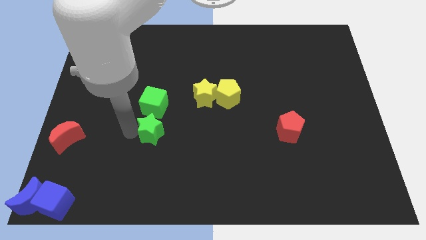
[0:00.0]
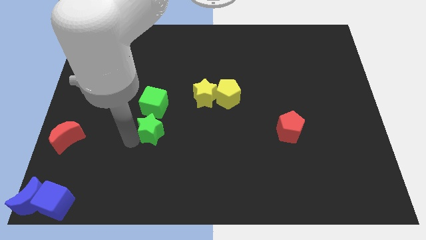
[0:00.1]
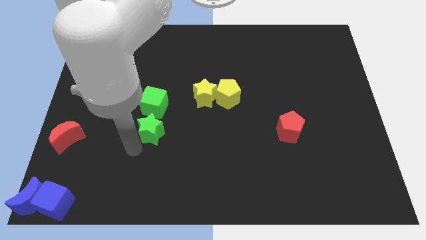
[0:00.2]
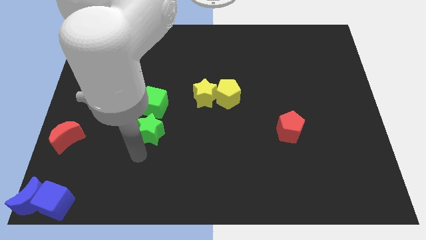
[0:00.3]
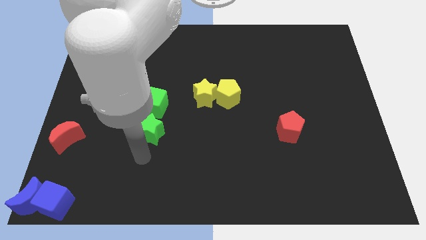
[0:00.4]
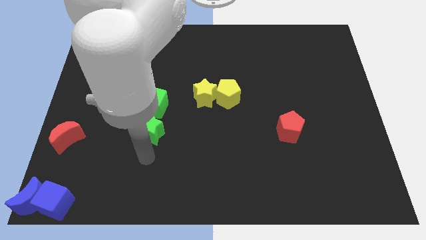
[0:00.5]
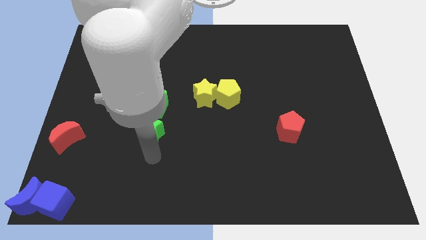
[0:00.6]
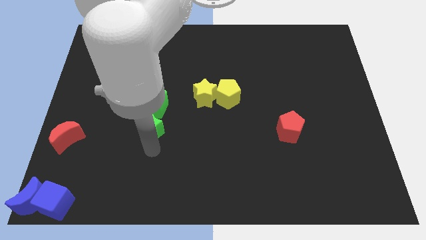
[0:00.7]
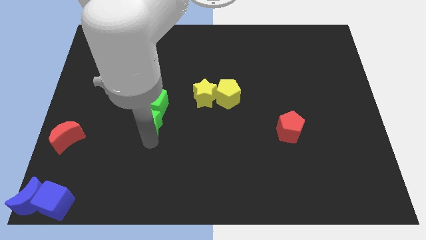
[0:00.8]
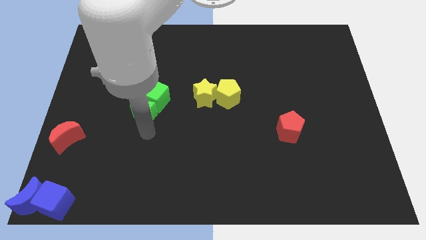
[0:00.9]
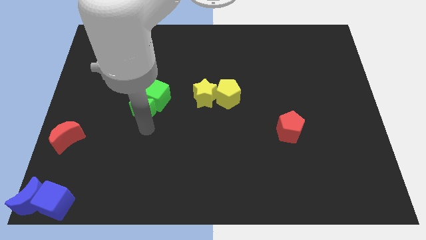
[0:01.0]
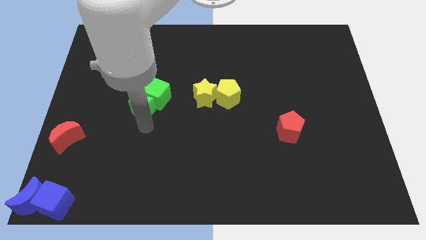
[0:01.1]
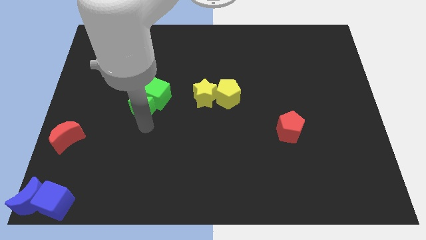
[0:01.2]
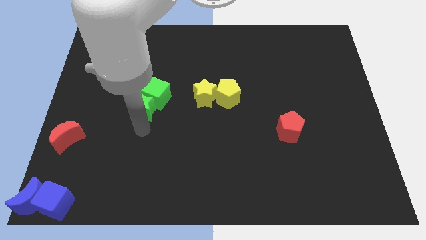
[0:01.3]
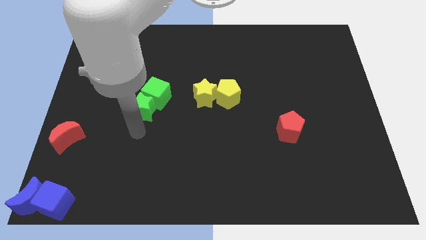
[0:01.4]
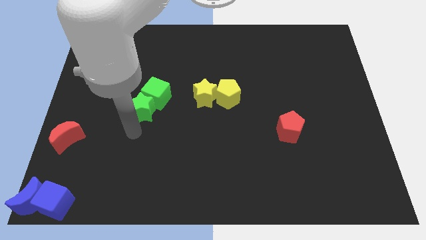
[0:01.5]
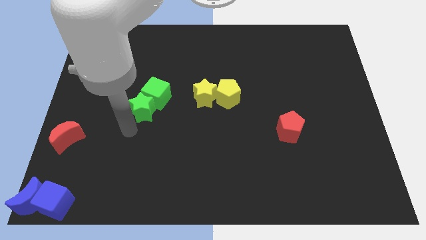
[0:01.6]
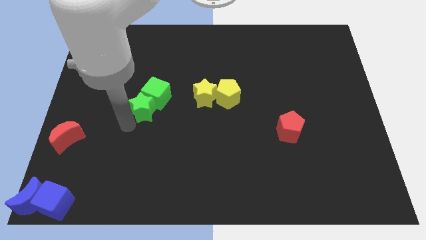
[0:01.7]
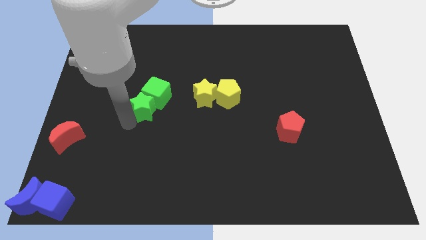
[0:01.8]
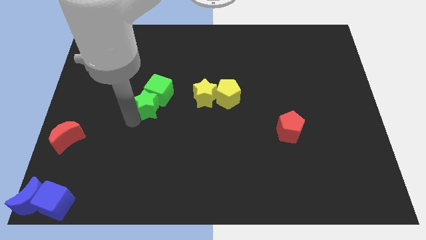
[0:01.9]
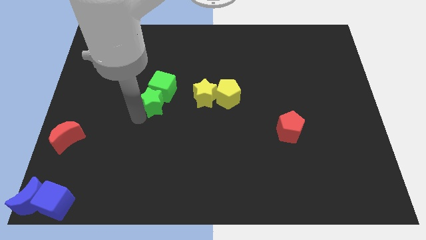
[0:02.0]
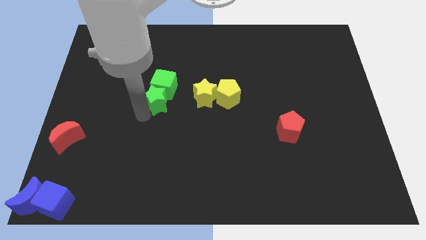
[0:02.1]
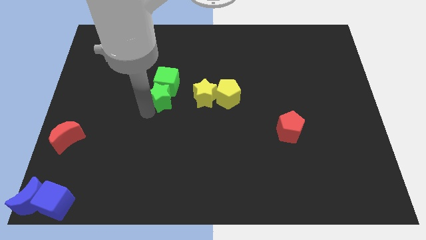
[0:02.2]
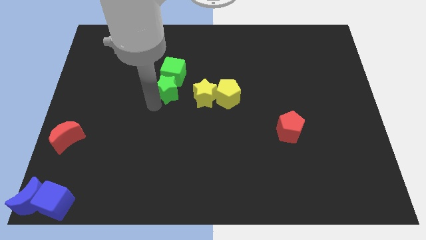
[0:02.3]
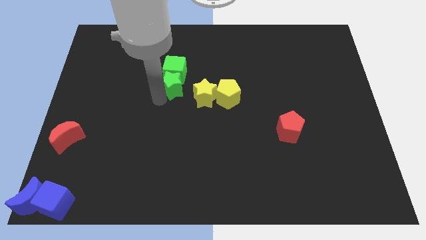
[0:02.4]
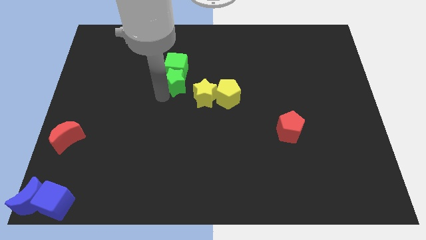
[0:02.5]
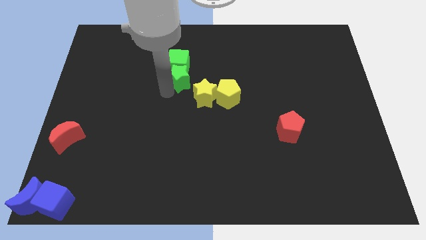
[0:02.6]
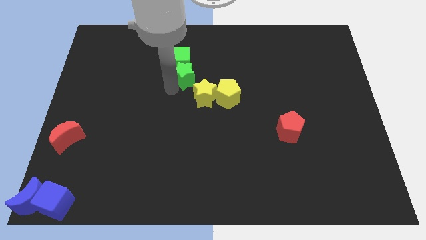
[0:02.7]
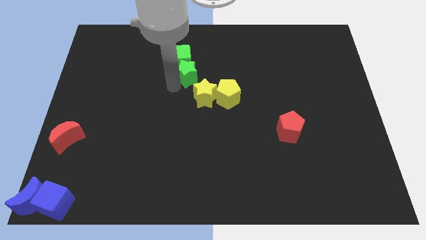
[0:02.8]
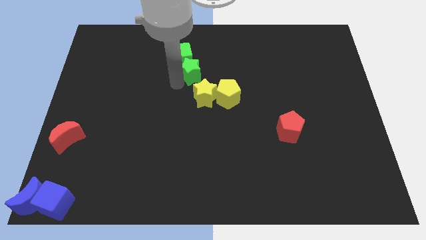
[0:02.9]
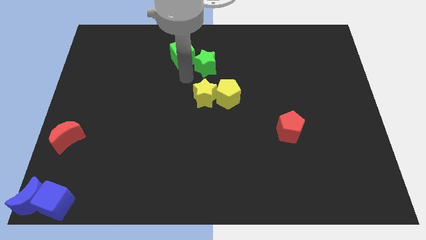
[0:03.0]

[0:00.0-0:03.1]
move the green star along with green cube towards the top center of the board

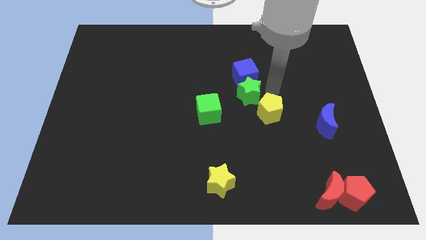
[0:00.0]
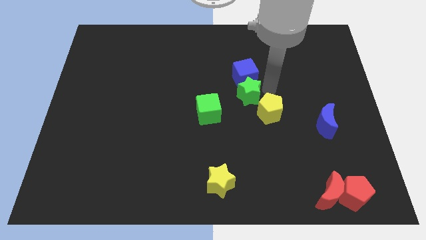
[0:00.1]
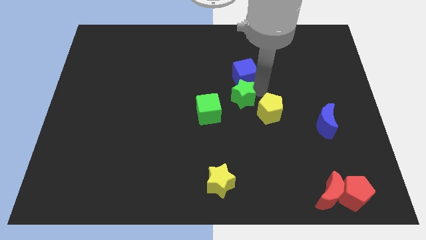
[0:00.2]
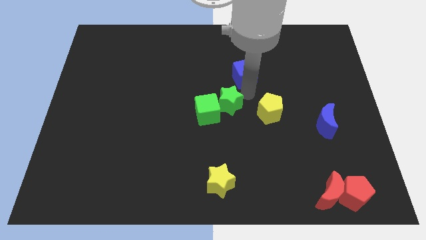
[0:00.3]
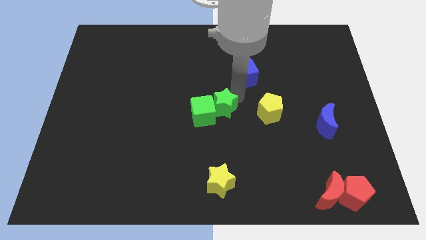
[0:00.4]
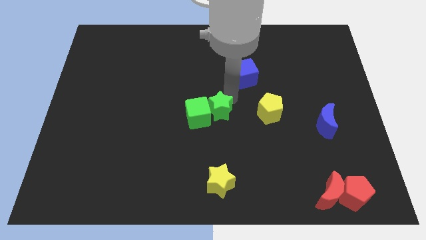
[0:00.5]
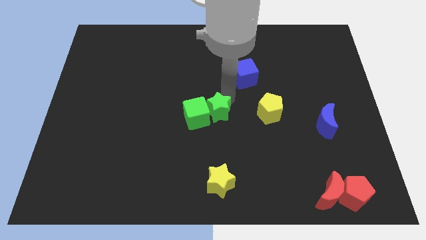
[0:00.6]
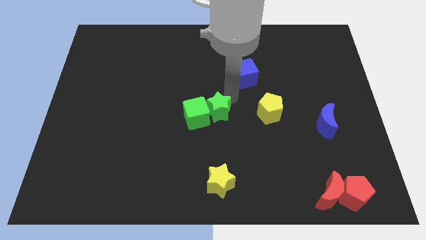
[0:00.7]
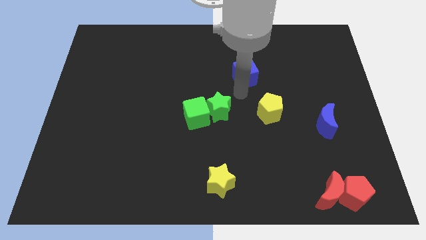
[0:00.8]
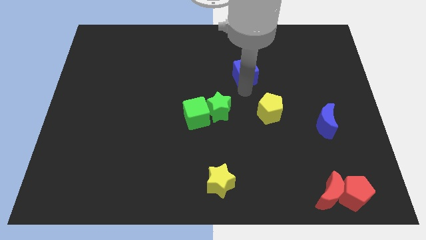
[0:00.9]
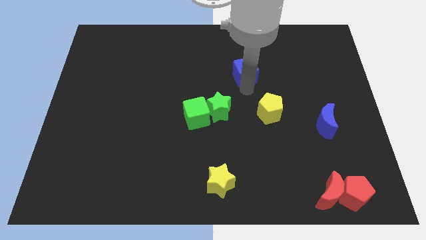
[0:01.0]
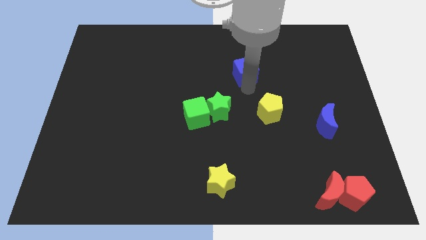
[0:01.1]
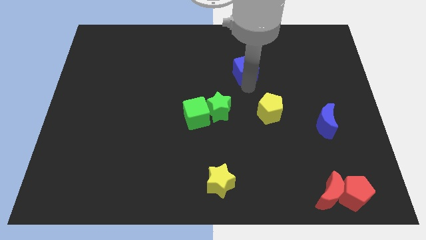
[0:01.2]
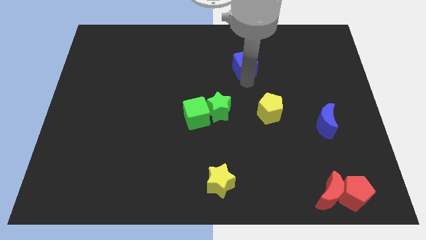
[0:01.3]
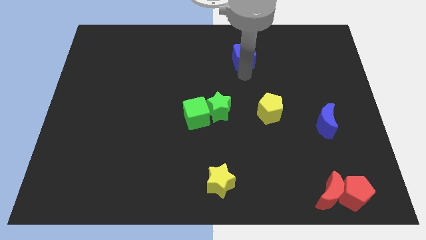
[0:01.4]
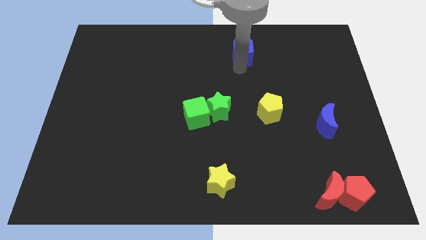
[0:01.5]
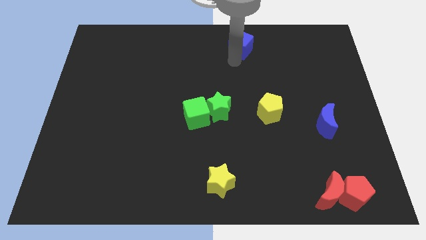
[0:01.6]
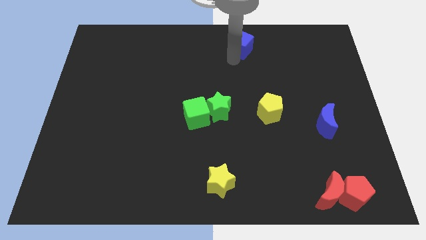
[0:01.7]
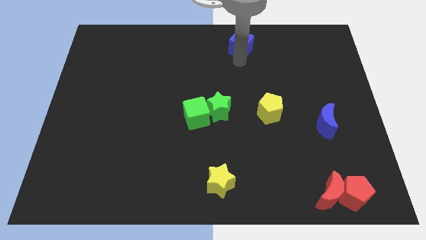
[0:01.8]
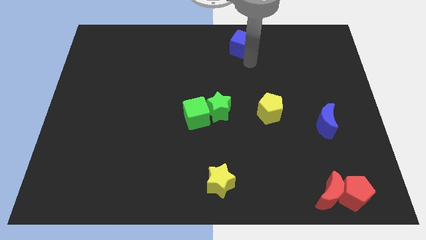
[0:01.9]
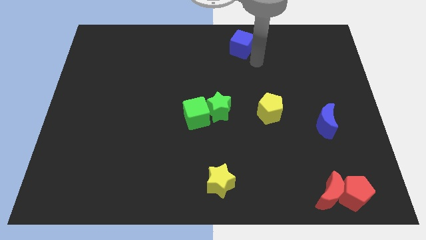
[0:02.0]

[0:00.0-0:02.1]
push the green star close to the green cube

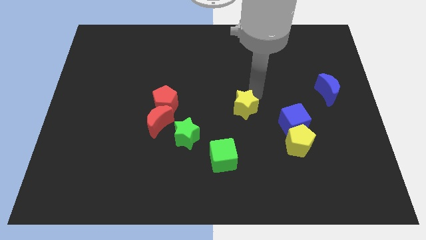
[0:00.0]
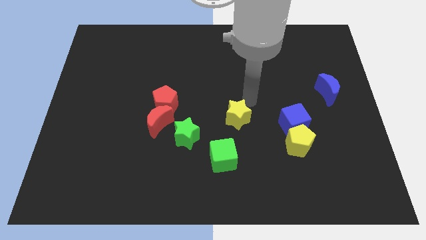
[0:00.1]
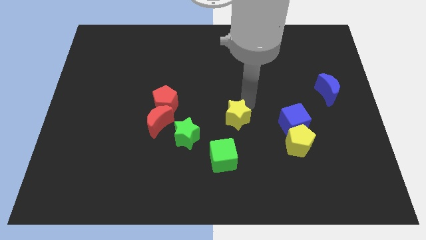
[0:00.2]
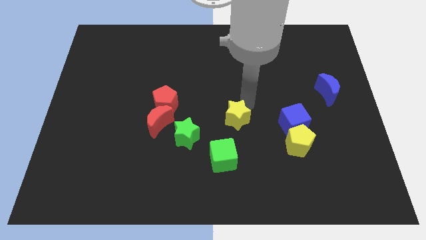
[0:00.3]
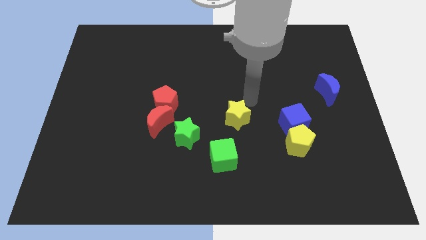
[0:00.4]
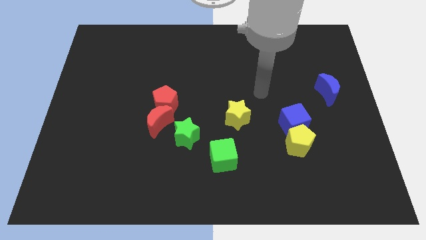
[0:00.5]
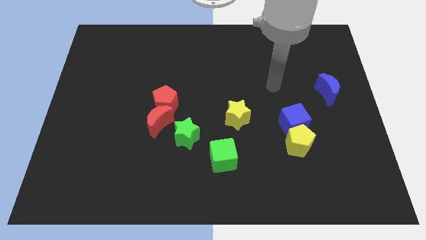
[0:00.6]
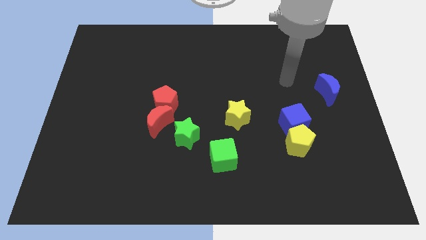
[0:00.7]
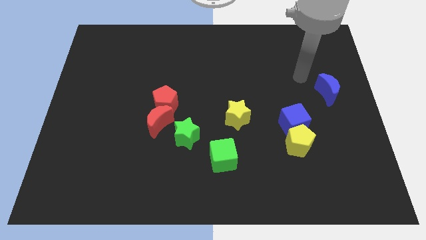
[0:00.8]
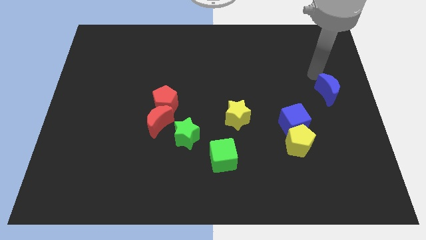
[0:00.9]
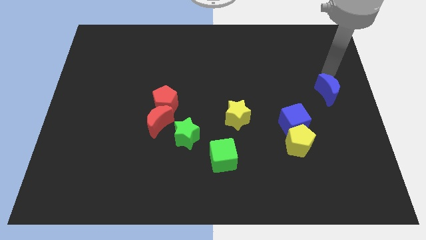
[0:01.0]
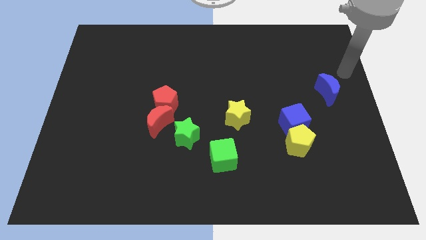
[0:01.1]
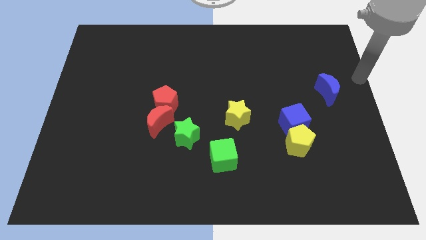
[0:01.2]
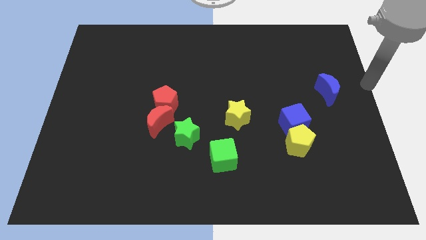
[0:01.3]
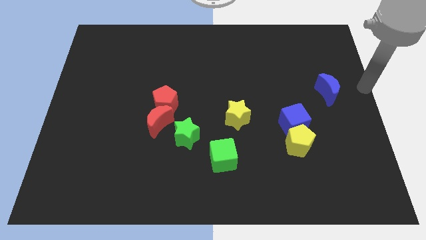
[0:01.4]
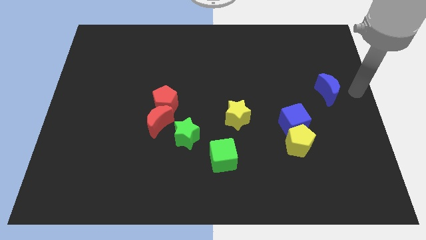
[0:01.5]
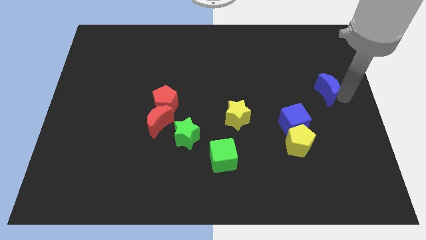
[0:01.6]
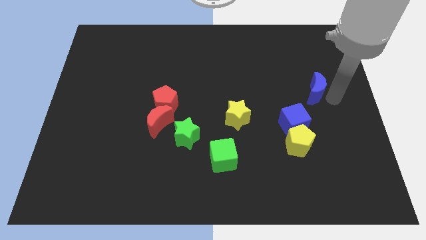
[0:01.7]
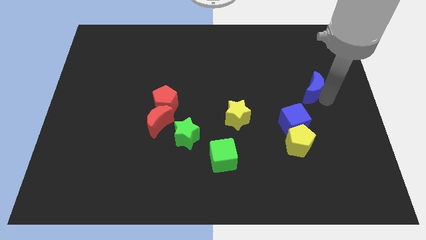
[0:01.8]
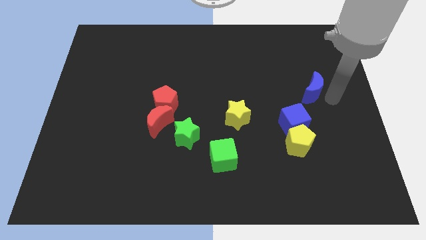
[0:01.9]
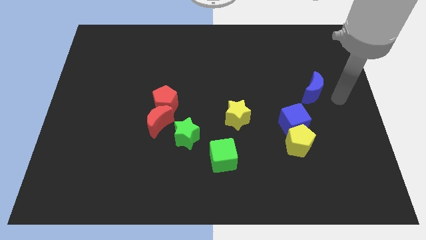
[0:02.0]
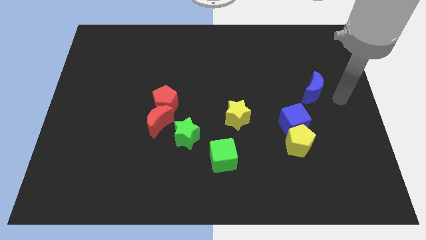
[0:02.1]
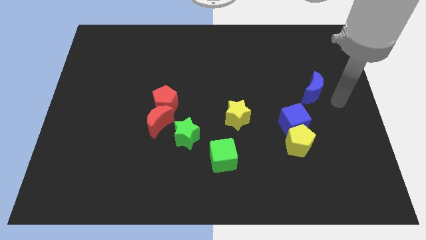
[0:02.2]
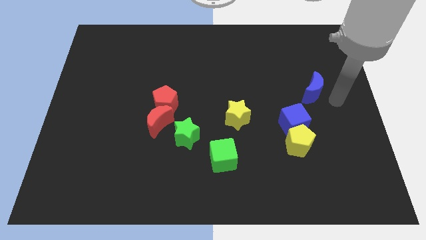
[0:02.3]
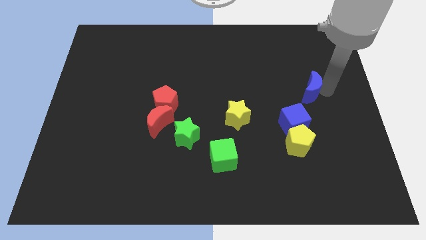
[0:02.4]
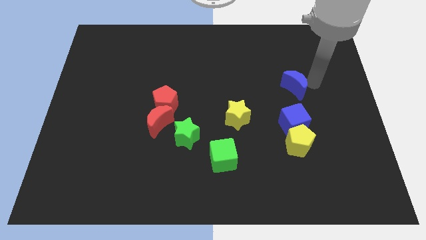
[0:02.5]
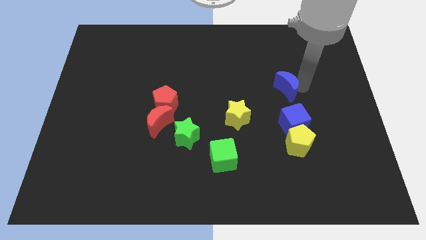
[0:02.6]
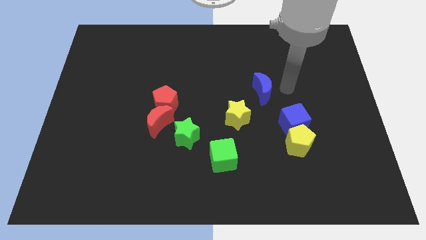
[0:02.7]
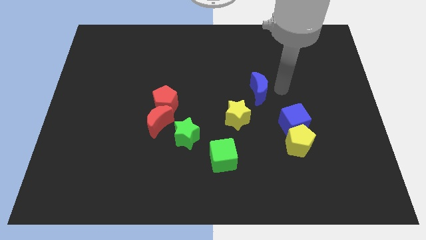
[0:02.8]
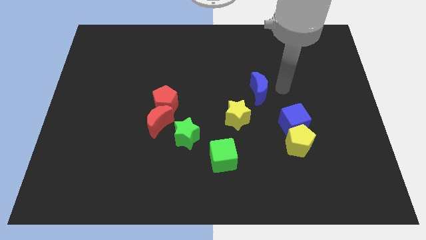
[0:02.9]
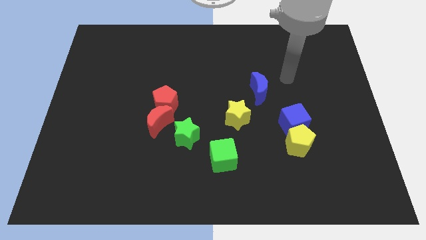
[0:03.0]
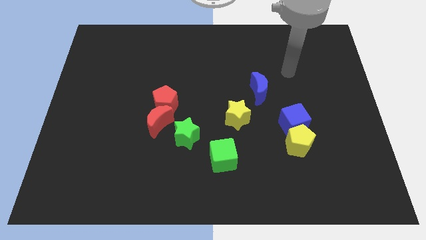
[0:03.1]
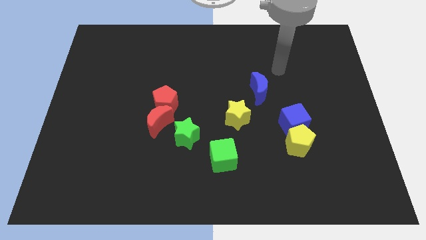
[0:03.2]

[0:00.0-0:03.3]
move the blue crescent to the top right side of the yellow star

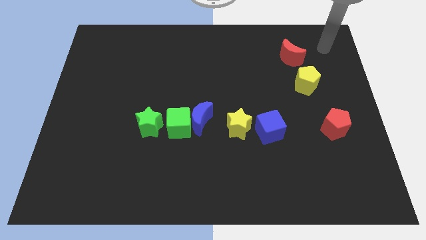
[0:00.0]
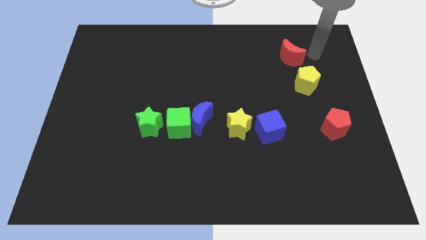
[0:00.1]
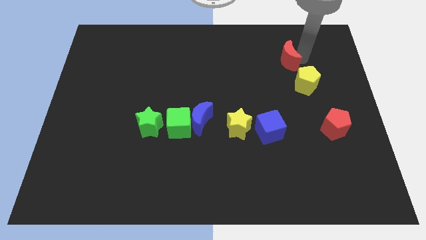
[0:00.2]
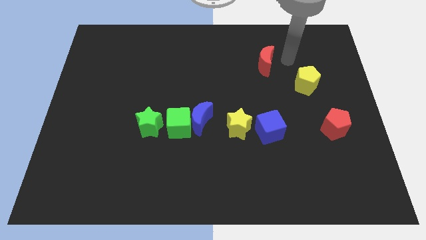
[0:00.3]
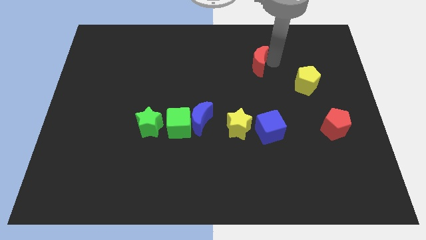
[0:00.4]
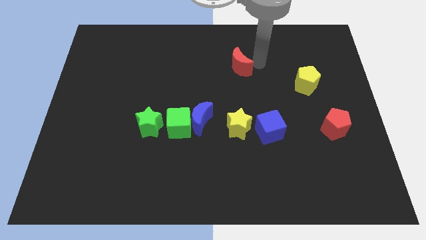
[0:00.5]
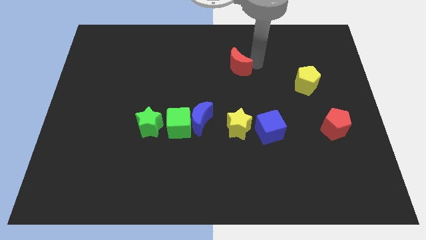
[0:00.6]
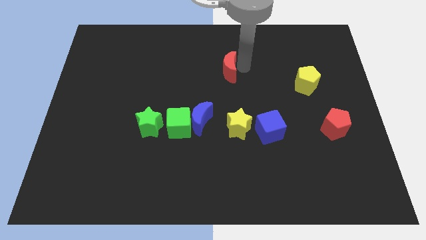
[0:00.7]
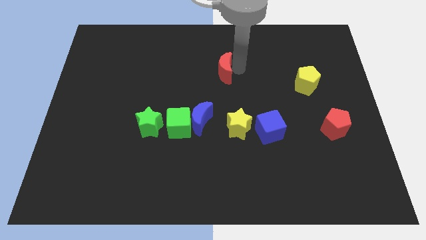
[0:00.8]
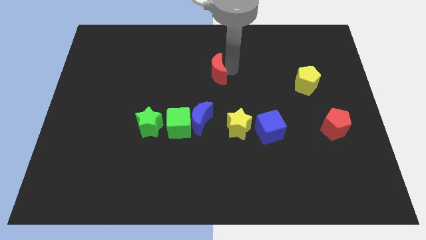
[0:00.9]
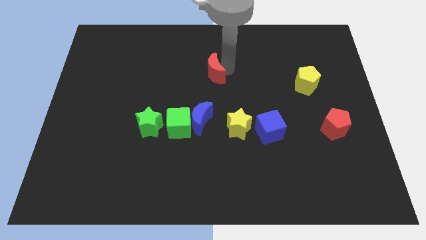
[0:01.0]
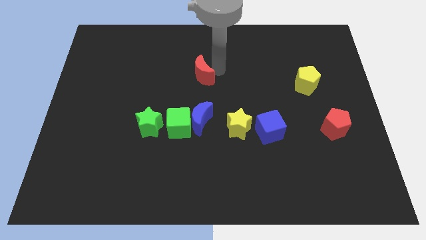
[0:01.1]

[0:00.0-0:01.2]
place the red crescent on top of the blue crescent
